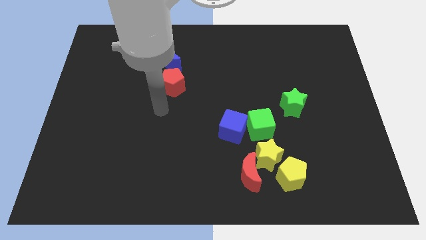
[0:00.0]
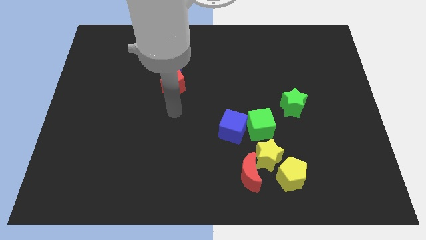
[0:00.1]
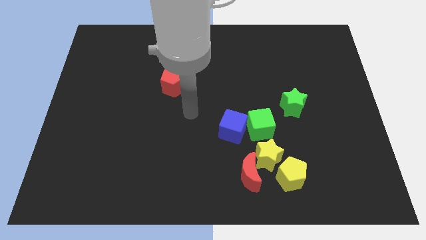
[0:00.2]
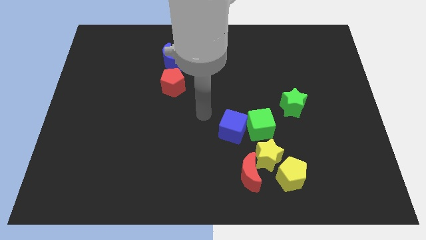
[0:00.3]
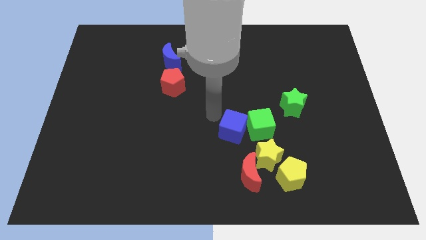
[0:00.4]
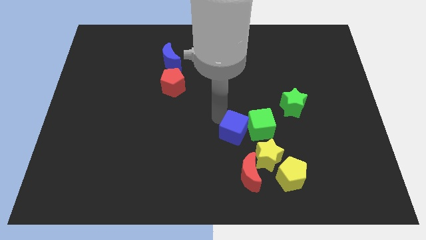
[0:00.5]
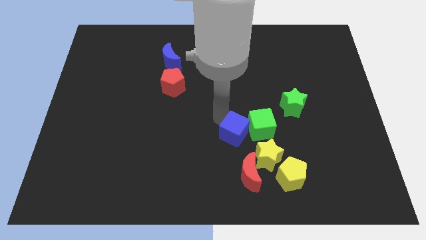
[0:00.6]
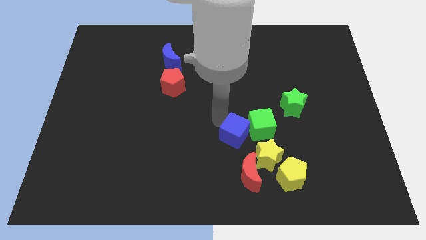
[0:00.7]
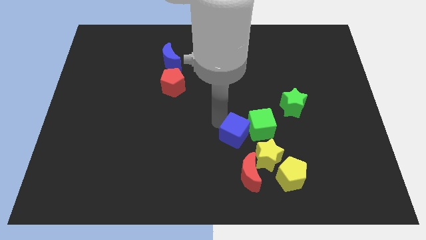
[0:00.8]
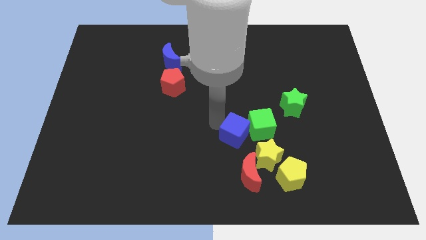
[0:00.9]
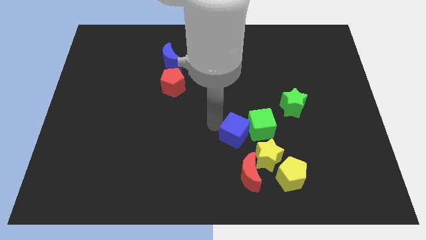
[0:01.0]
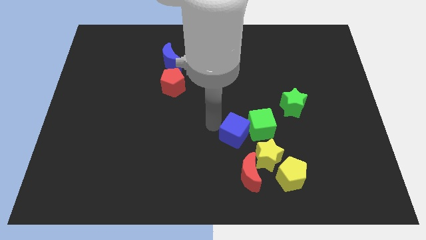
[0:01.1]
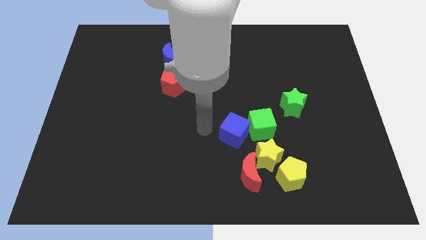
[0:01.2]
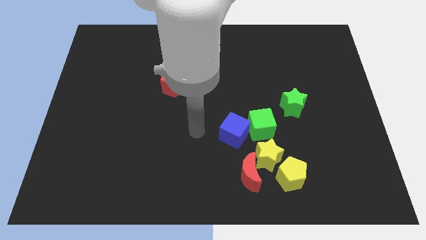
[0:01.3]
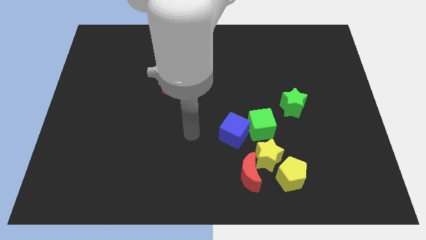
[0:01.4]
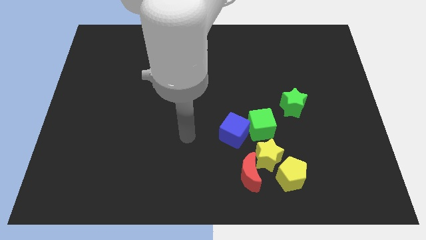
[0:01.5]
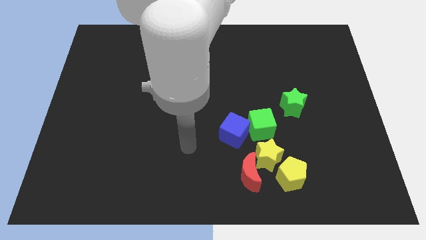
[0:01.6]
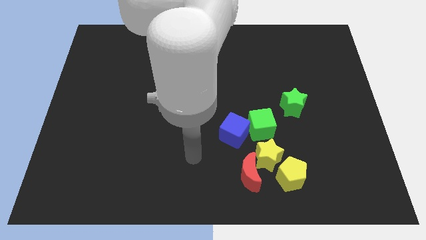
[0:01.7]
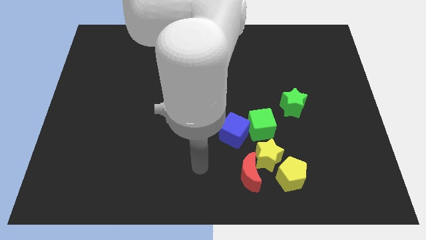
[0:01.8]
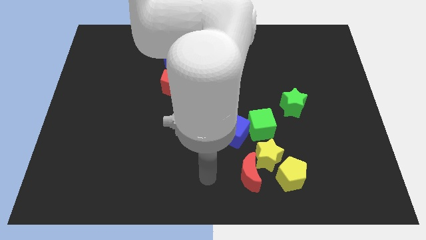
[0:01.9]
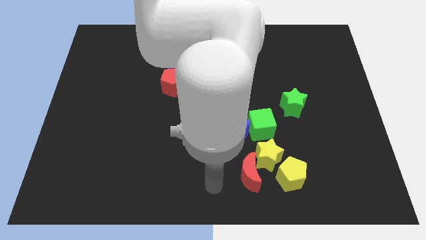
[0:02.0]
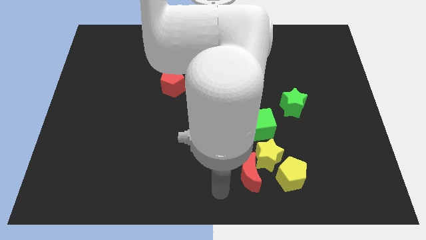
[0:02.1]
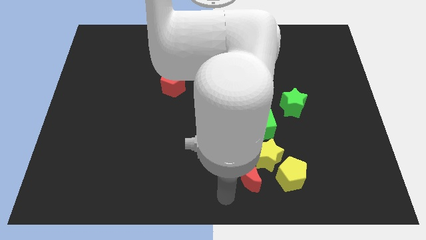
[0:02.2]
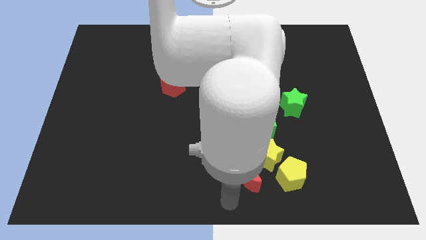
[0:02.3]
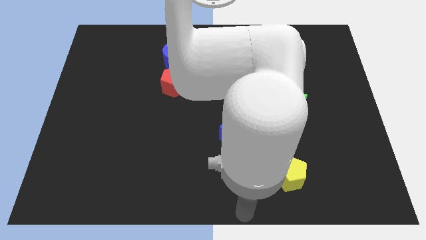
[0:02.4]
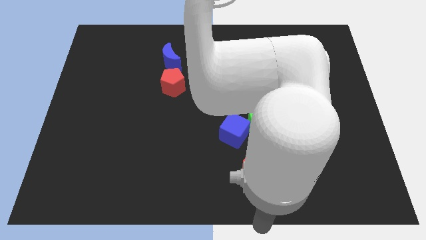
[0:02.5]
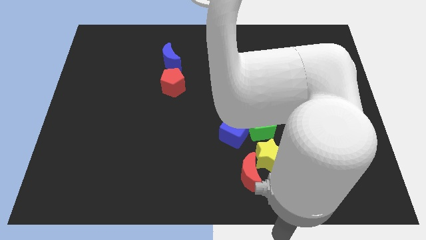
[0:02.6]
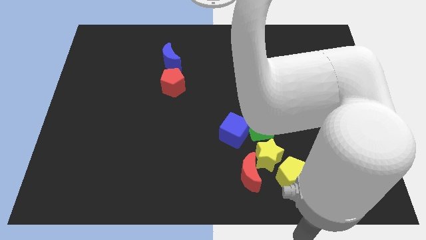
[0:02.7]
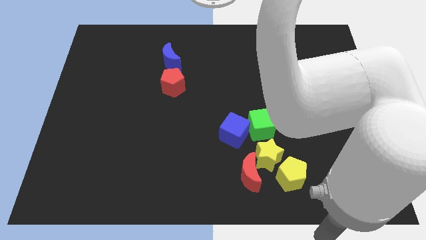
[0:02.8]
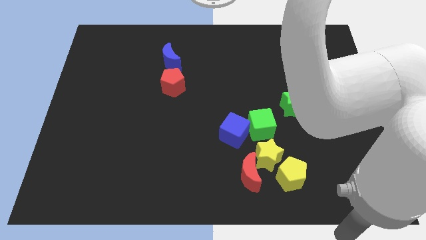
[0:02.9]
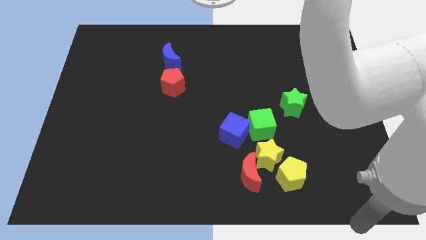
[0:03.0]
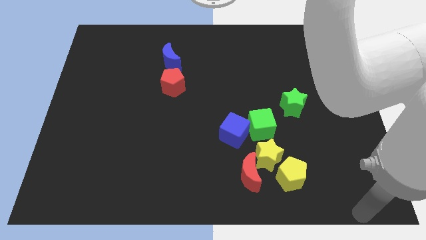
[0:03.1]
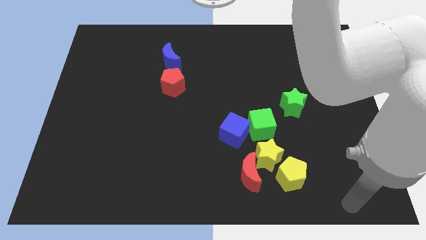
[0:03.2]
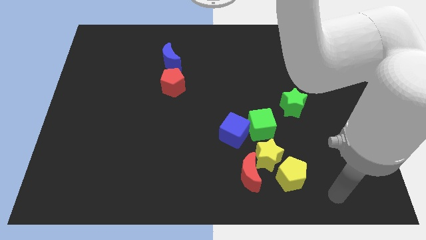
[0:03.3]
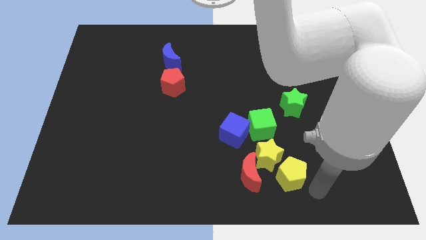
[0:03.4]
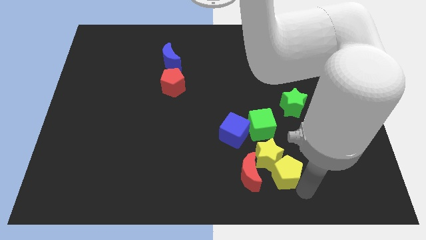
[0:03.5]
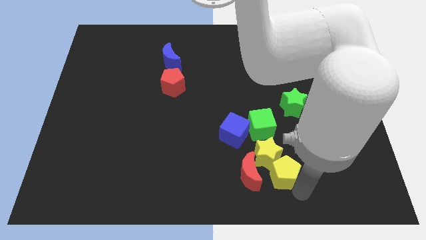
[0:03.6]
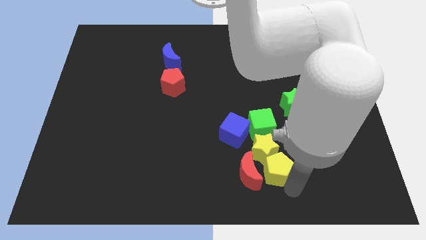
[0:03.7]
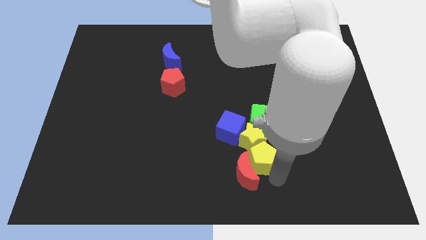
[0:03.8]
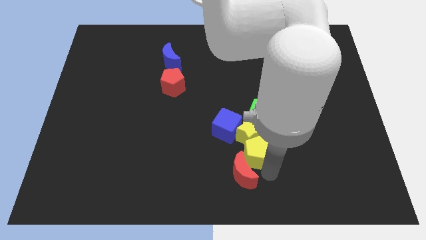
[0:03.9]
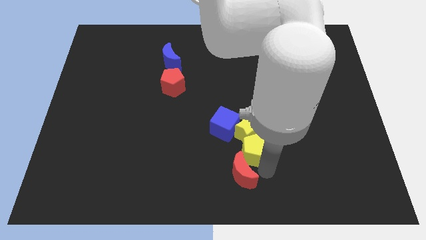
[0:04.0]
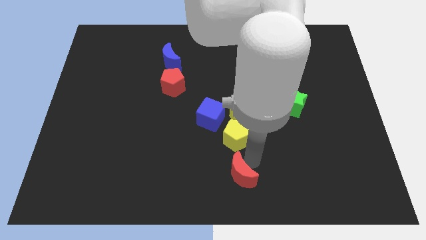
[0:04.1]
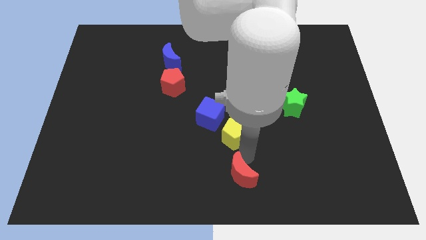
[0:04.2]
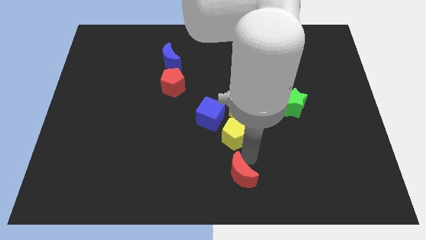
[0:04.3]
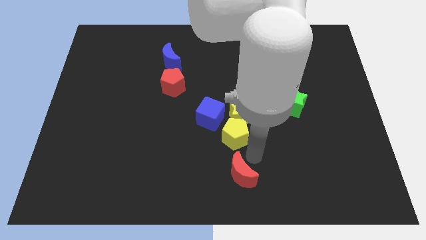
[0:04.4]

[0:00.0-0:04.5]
push the yellow pentagon into a group of objects

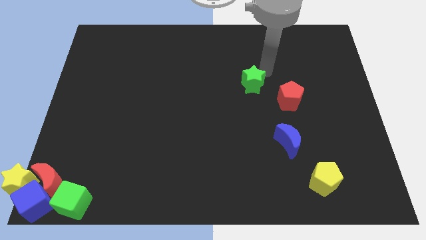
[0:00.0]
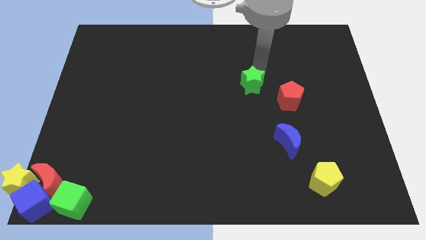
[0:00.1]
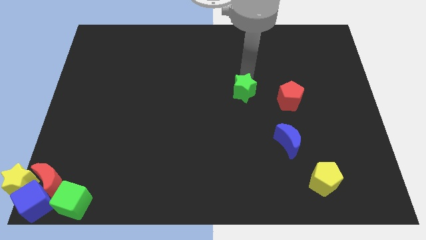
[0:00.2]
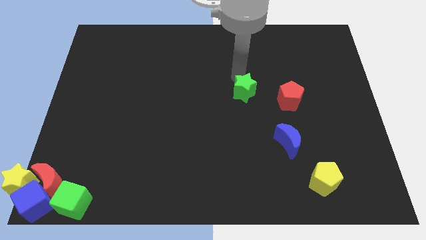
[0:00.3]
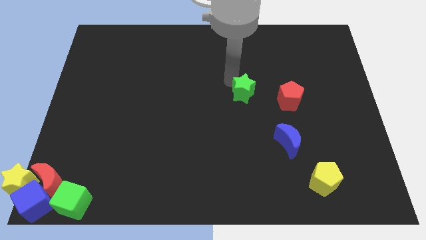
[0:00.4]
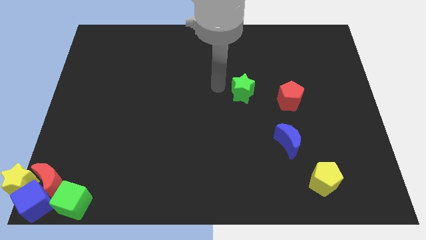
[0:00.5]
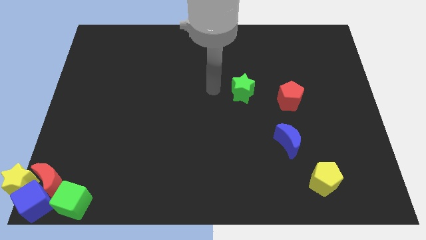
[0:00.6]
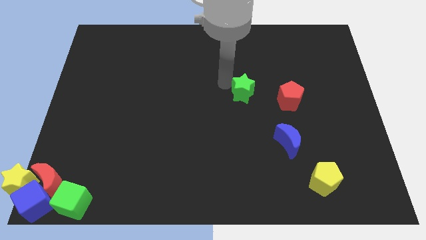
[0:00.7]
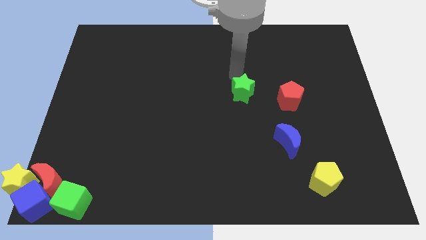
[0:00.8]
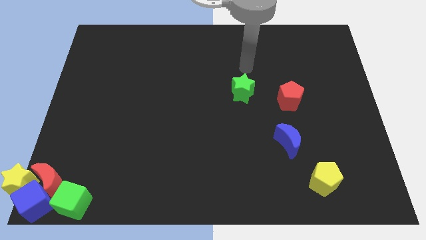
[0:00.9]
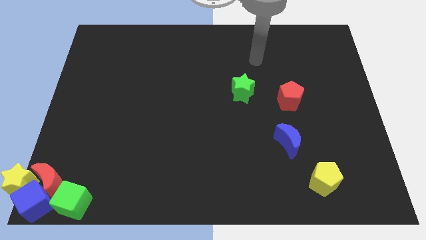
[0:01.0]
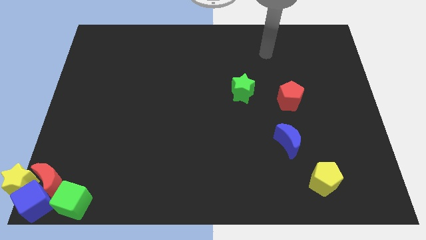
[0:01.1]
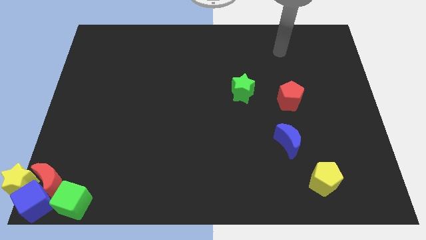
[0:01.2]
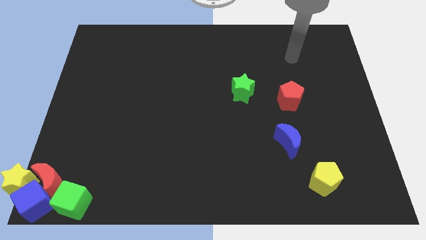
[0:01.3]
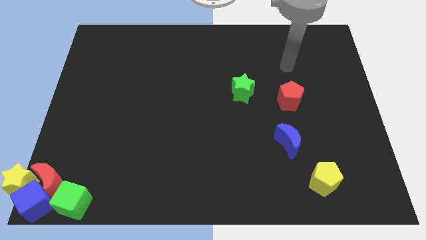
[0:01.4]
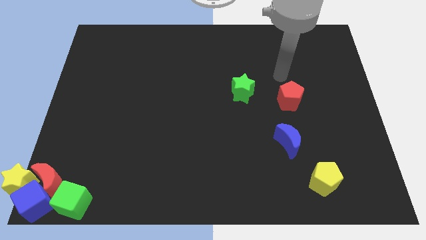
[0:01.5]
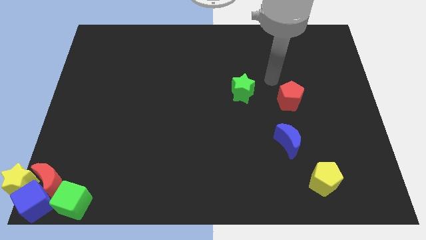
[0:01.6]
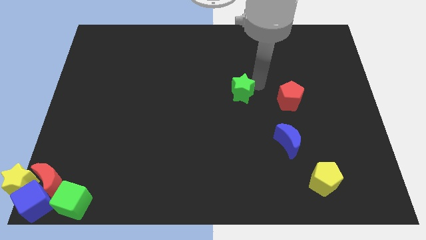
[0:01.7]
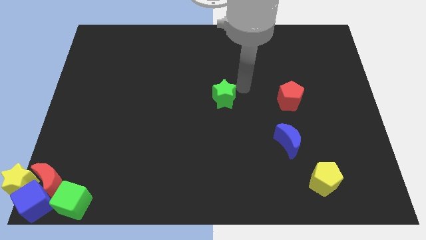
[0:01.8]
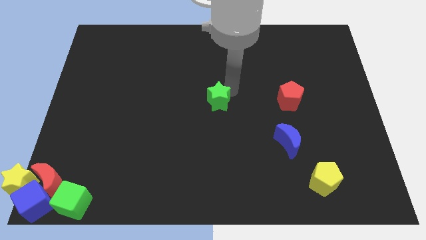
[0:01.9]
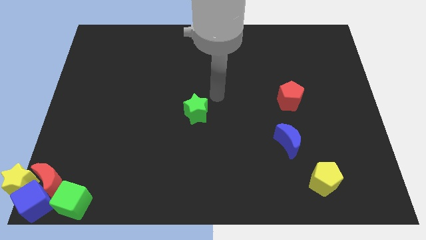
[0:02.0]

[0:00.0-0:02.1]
push the green star slightly at the center

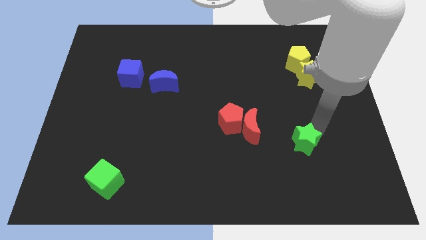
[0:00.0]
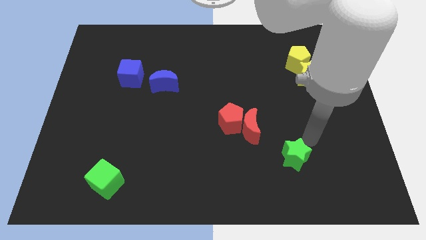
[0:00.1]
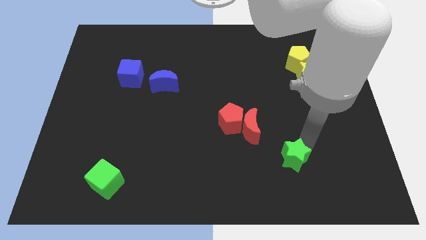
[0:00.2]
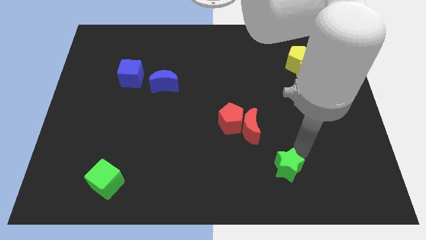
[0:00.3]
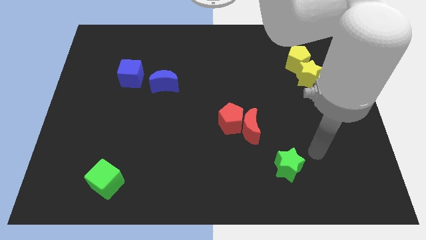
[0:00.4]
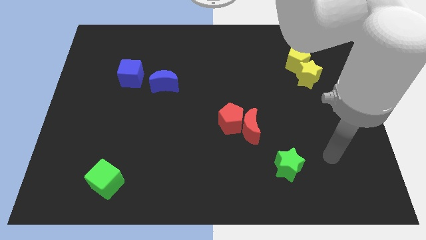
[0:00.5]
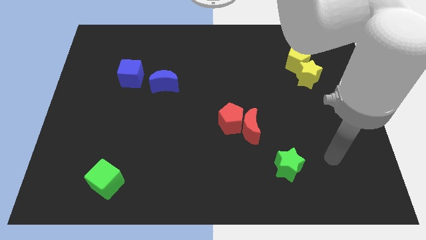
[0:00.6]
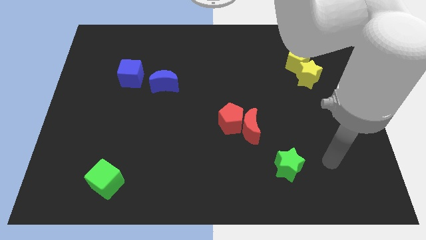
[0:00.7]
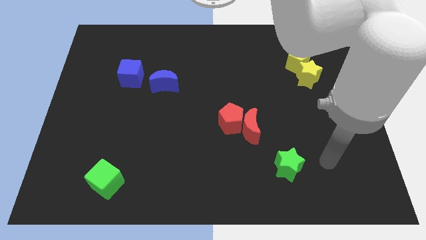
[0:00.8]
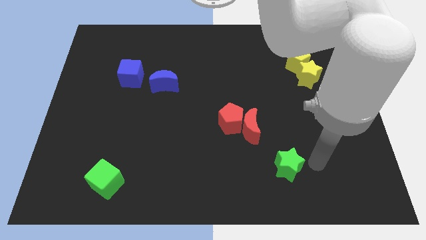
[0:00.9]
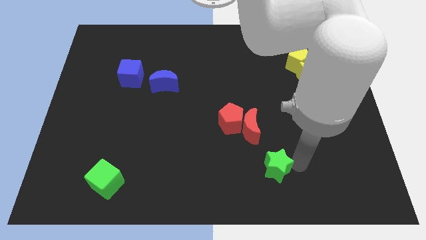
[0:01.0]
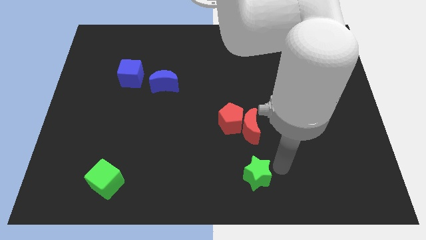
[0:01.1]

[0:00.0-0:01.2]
move the green star to the bottom of the red crescent

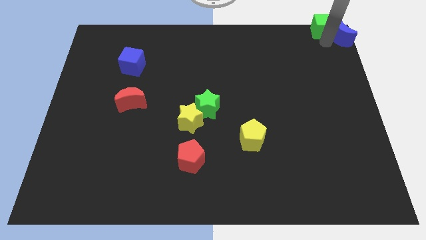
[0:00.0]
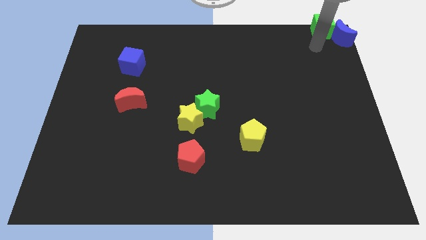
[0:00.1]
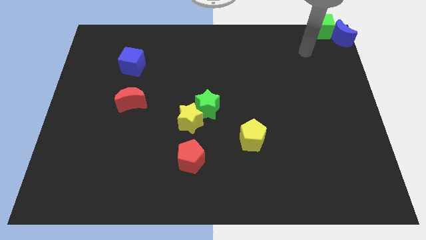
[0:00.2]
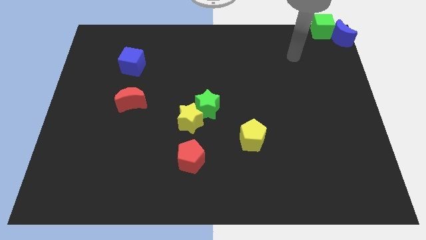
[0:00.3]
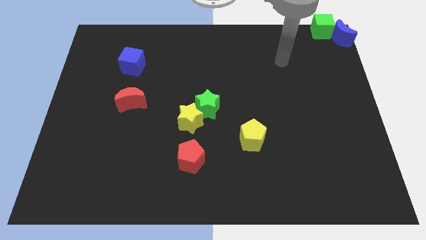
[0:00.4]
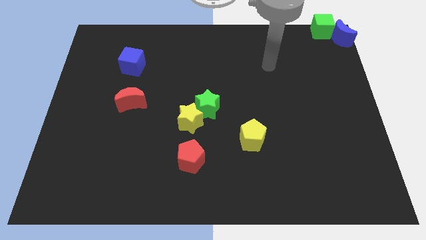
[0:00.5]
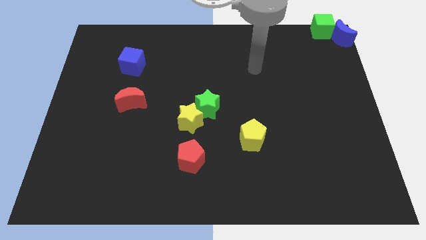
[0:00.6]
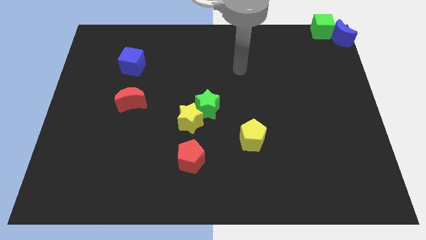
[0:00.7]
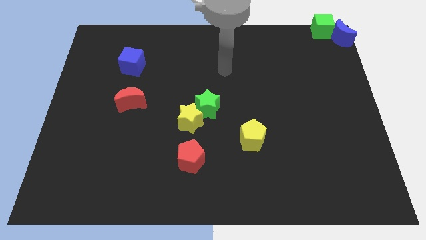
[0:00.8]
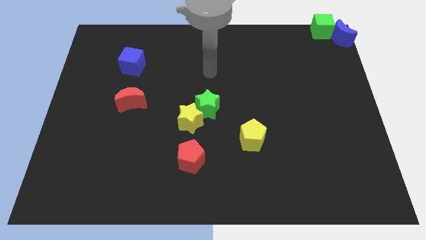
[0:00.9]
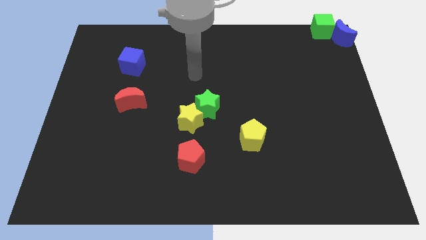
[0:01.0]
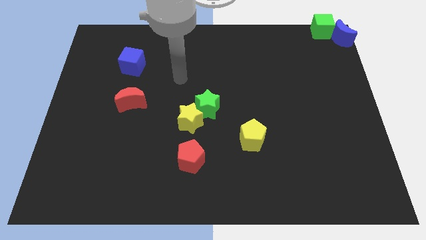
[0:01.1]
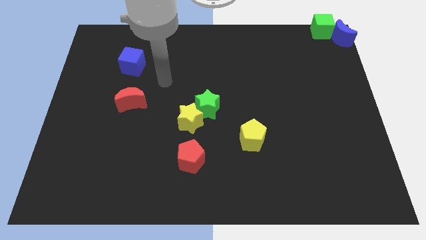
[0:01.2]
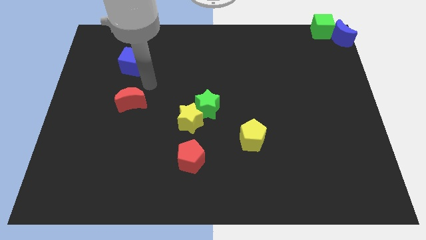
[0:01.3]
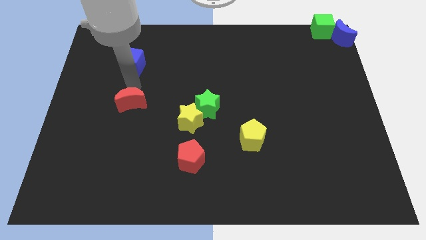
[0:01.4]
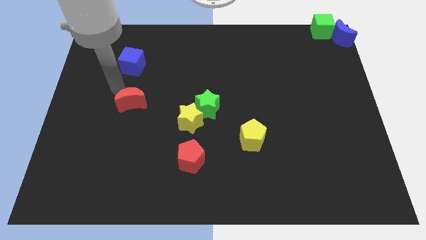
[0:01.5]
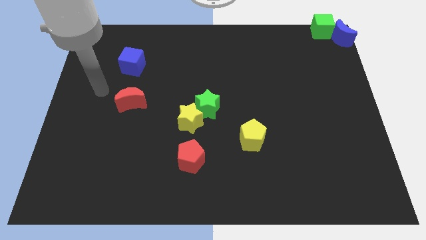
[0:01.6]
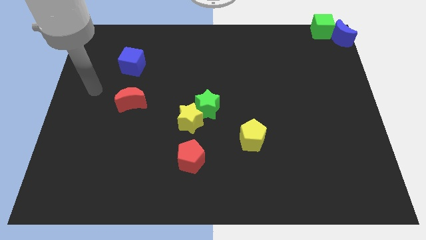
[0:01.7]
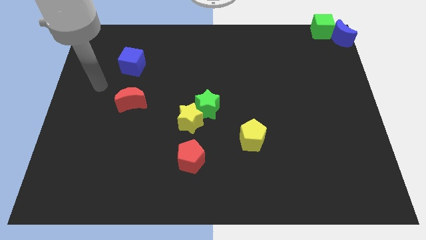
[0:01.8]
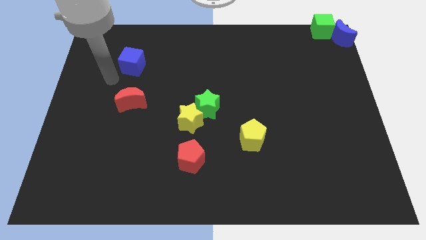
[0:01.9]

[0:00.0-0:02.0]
move arm away from blue crescent
